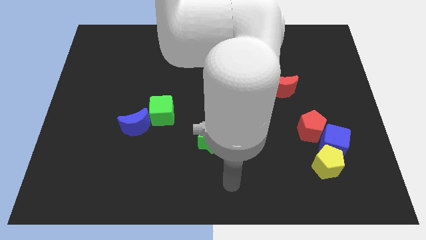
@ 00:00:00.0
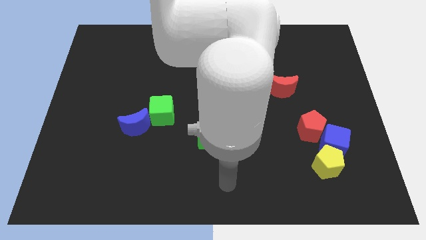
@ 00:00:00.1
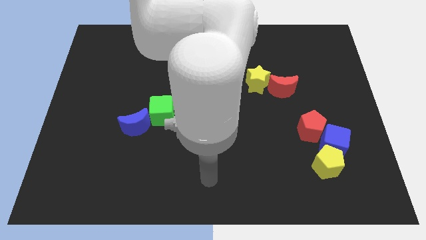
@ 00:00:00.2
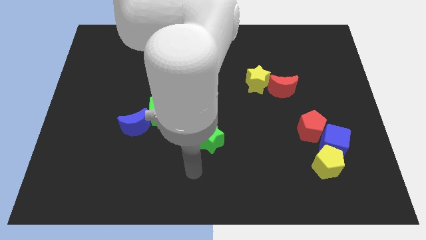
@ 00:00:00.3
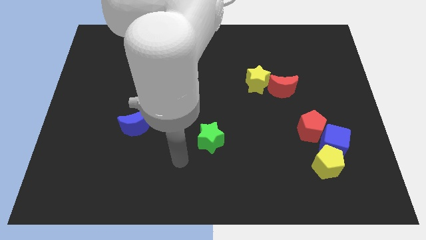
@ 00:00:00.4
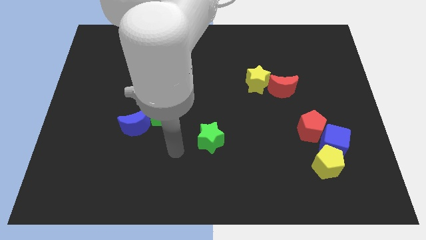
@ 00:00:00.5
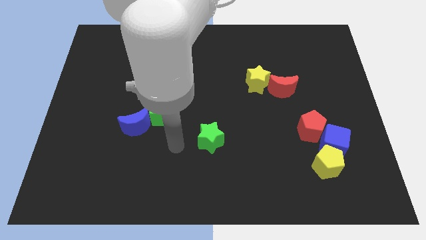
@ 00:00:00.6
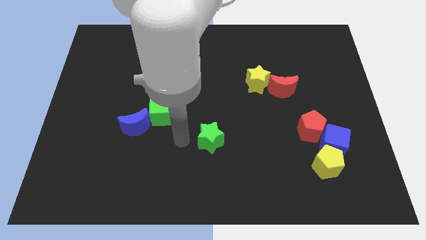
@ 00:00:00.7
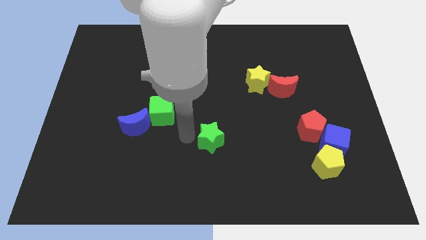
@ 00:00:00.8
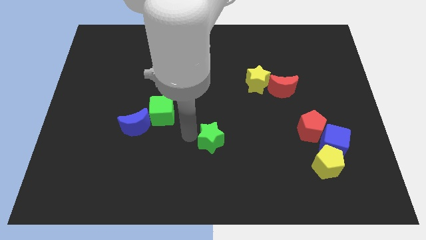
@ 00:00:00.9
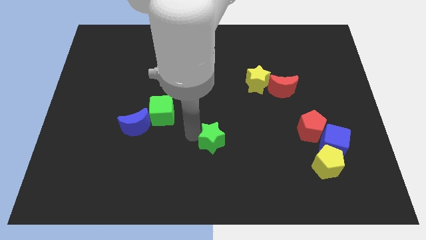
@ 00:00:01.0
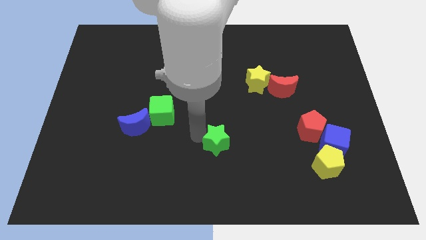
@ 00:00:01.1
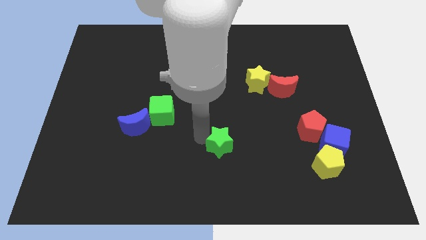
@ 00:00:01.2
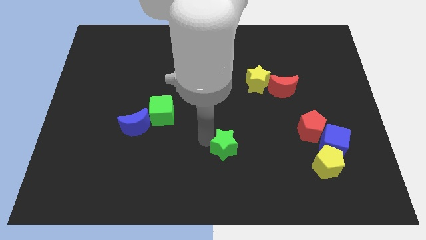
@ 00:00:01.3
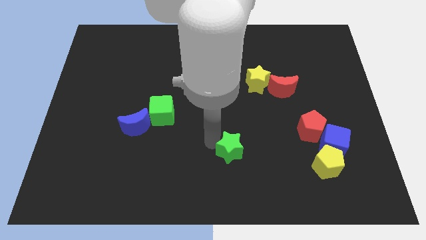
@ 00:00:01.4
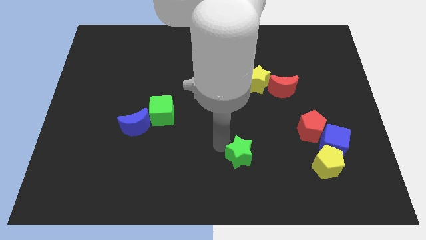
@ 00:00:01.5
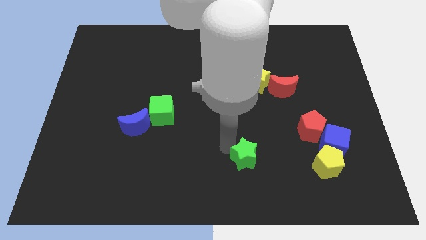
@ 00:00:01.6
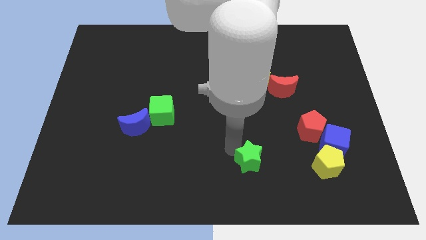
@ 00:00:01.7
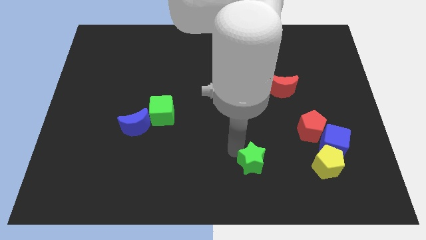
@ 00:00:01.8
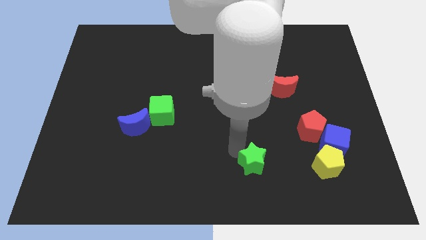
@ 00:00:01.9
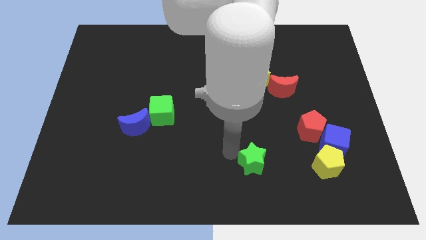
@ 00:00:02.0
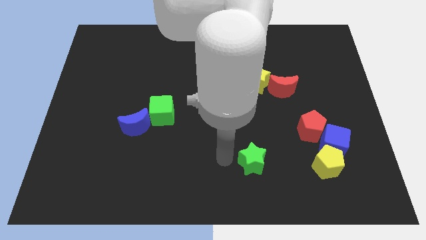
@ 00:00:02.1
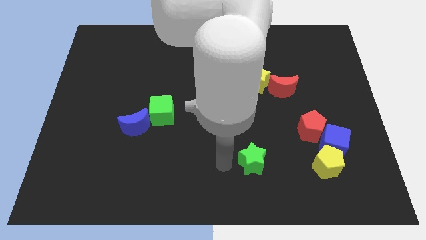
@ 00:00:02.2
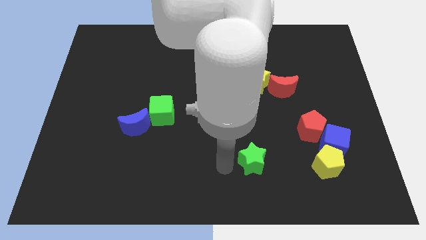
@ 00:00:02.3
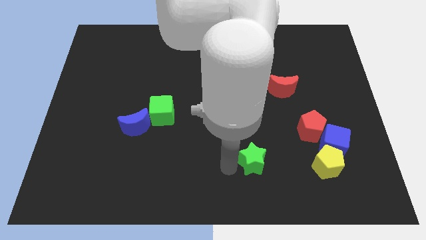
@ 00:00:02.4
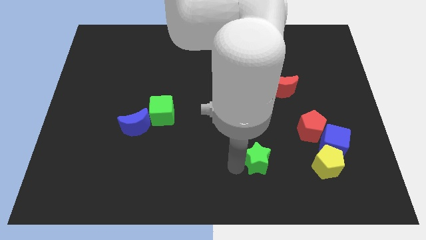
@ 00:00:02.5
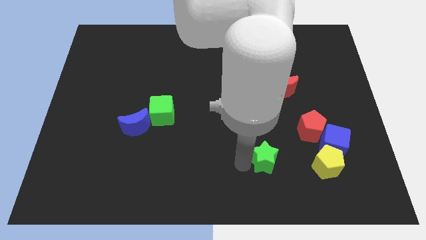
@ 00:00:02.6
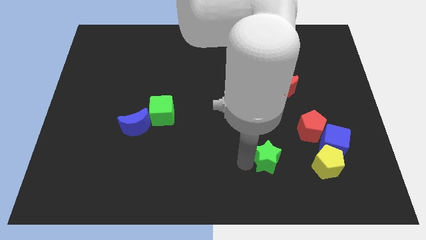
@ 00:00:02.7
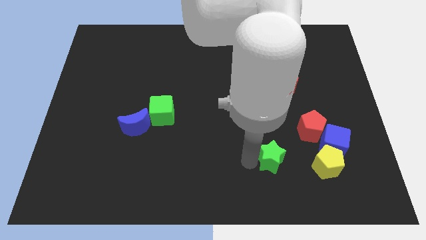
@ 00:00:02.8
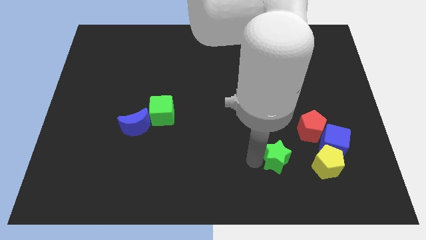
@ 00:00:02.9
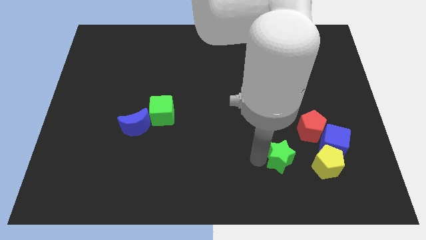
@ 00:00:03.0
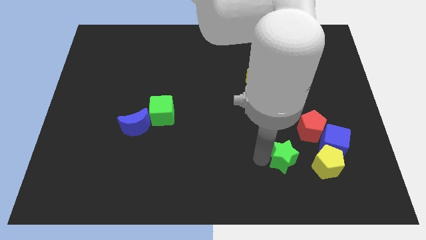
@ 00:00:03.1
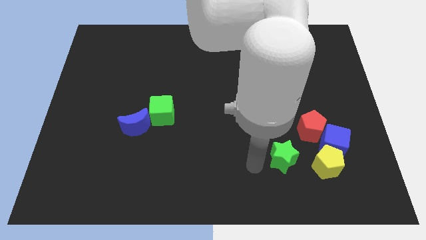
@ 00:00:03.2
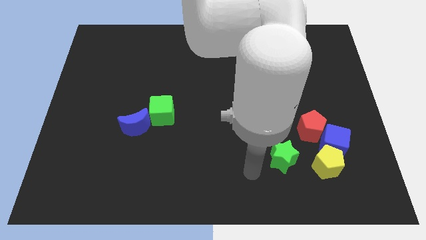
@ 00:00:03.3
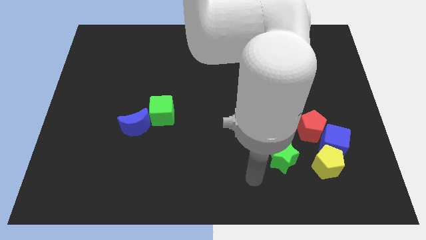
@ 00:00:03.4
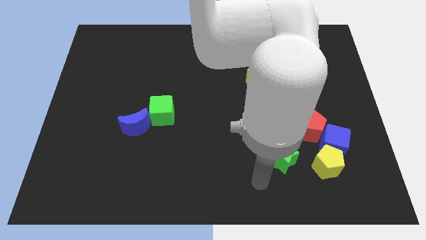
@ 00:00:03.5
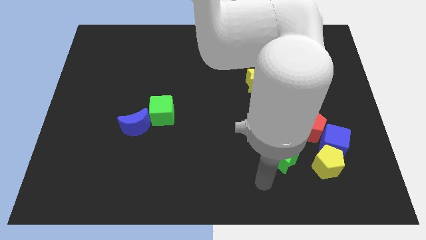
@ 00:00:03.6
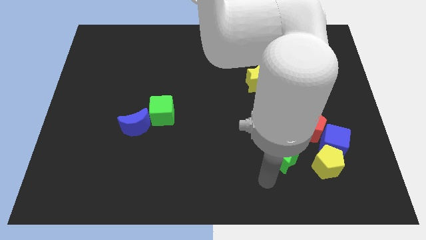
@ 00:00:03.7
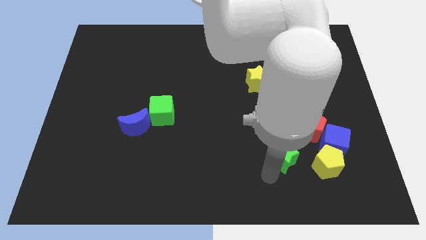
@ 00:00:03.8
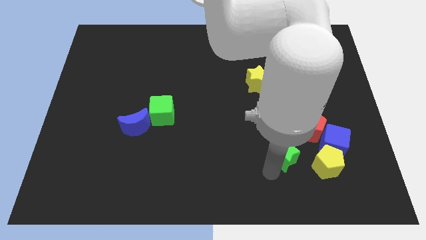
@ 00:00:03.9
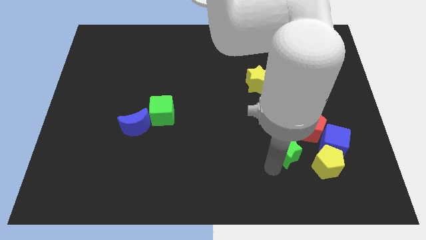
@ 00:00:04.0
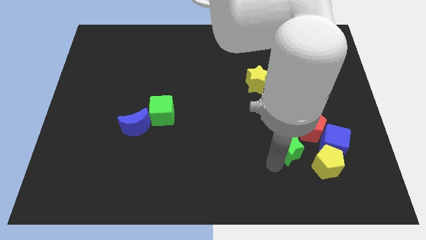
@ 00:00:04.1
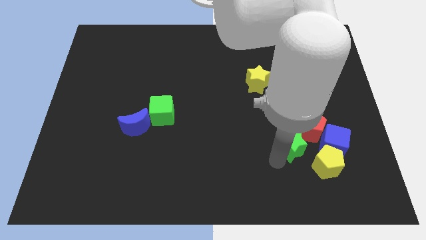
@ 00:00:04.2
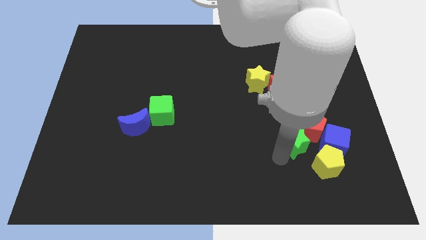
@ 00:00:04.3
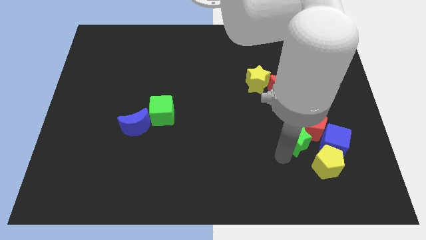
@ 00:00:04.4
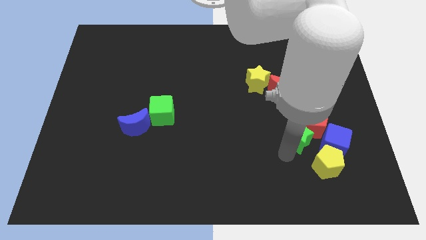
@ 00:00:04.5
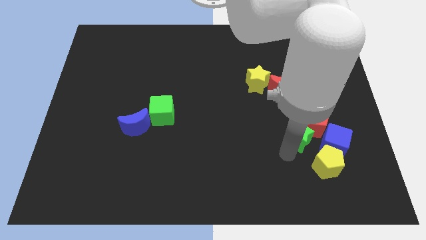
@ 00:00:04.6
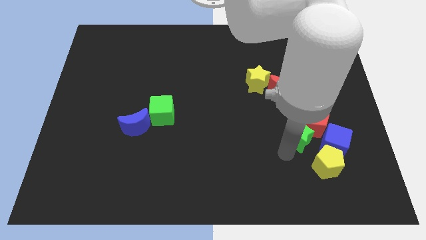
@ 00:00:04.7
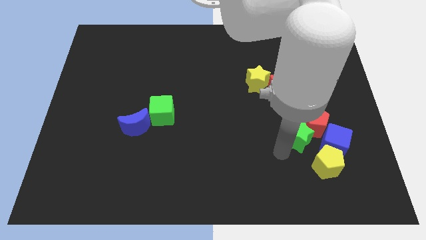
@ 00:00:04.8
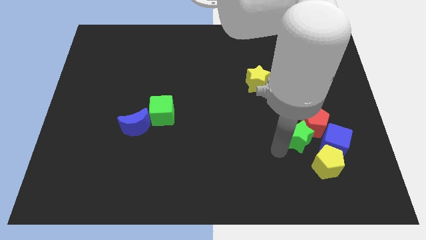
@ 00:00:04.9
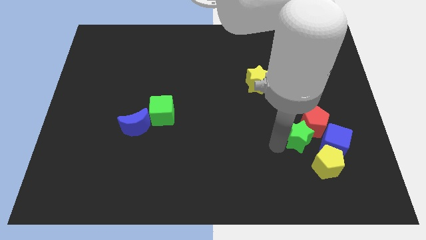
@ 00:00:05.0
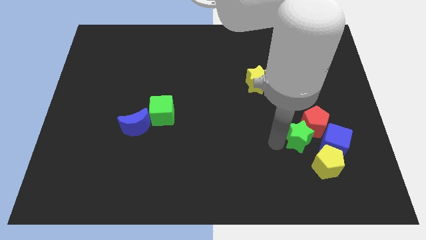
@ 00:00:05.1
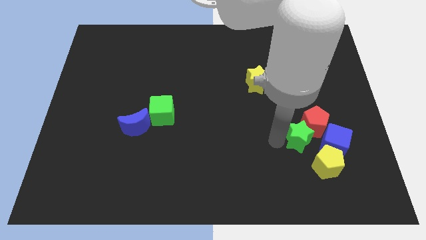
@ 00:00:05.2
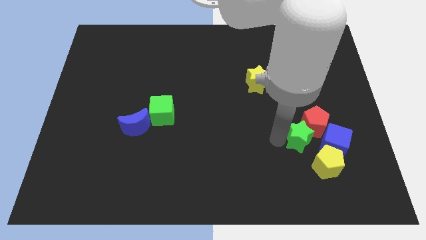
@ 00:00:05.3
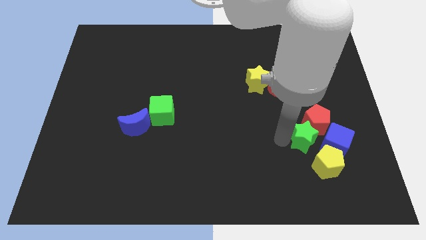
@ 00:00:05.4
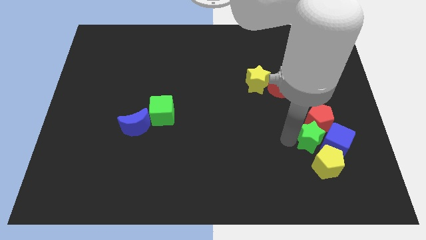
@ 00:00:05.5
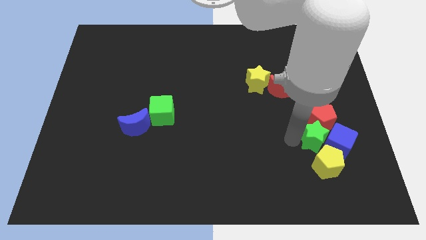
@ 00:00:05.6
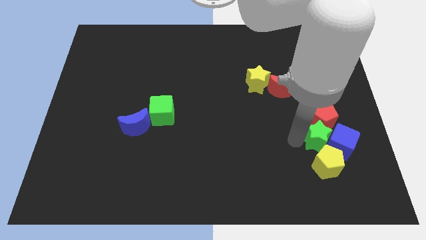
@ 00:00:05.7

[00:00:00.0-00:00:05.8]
put the green star next to the blue cube

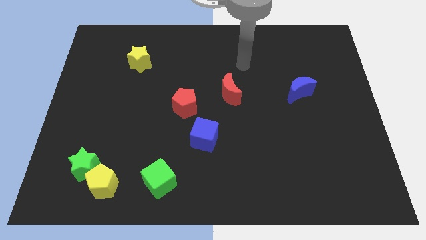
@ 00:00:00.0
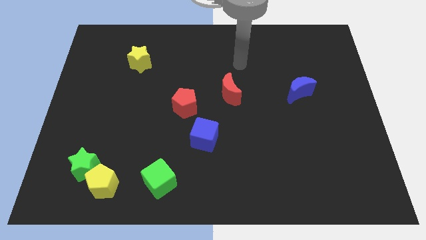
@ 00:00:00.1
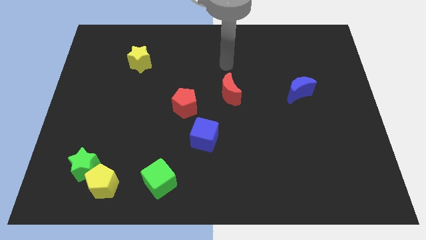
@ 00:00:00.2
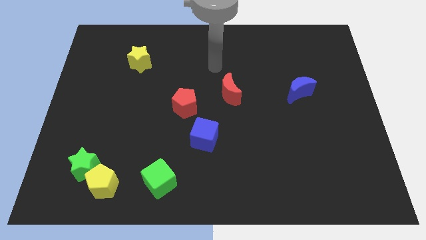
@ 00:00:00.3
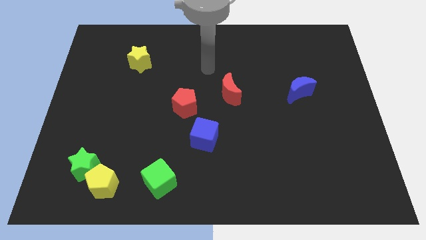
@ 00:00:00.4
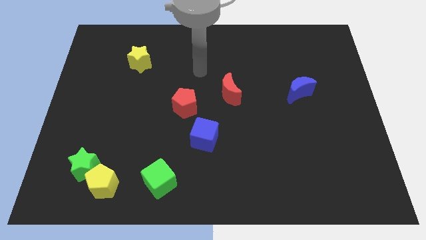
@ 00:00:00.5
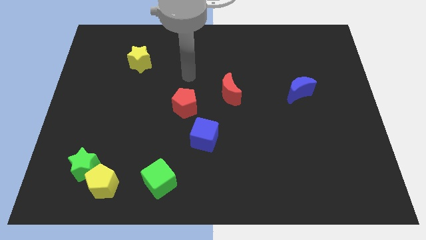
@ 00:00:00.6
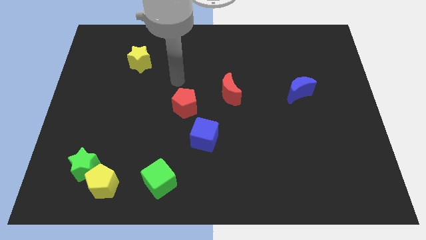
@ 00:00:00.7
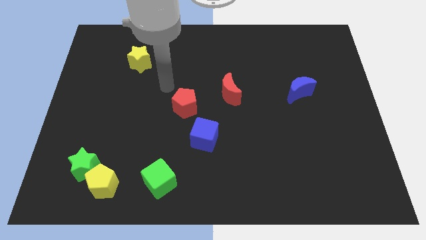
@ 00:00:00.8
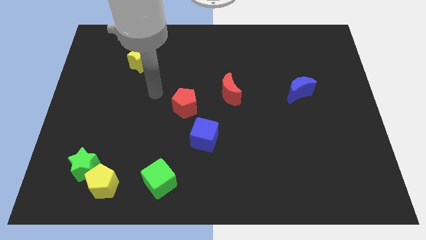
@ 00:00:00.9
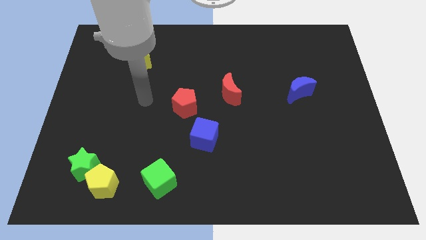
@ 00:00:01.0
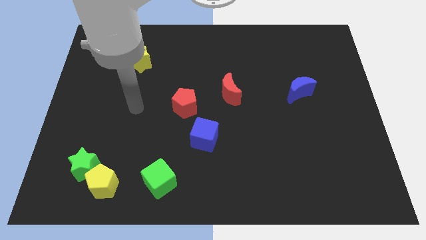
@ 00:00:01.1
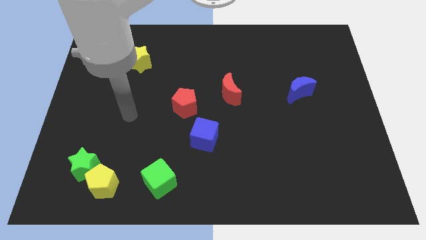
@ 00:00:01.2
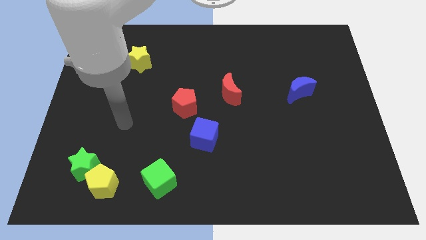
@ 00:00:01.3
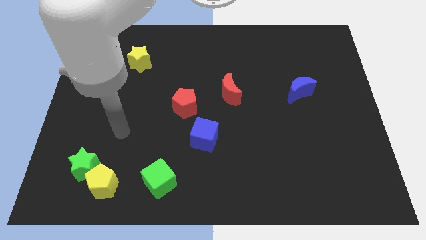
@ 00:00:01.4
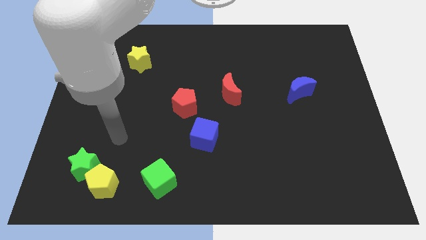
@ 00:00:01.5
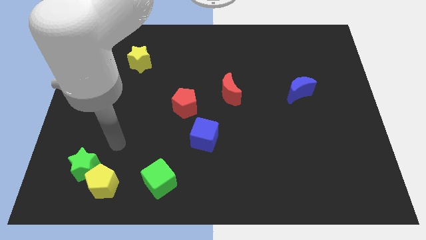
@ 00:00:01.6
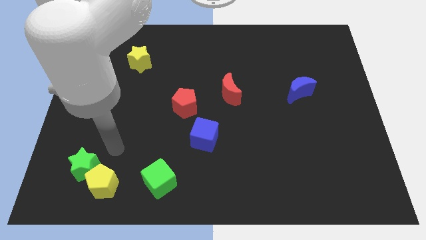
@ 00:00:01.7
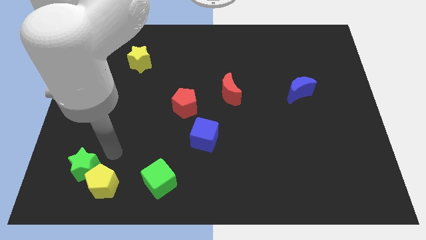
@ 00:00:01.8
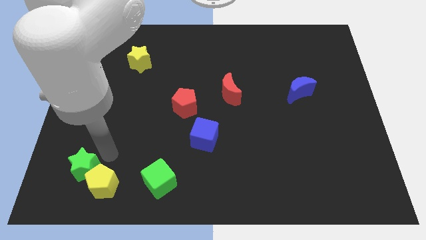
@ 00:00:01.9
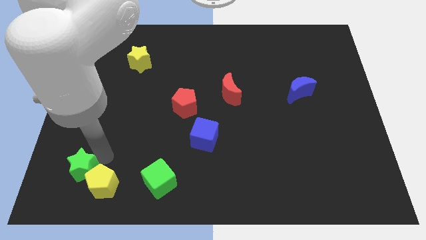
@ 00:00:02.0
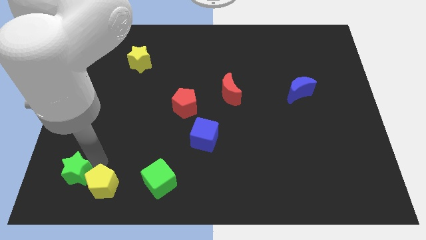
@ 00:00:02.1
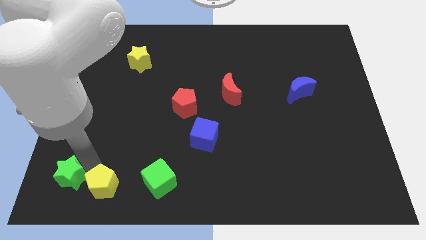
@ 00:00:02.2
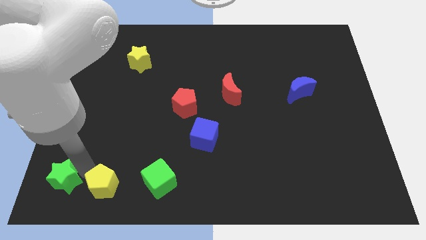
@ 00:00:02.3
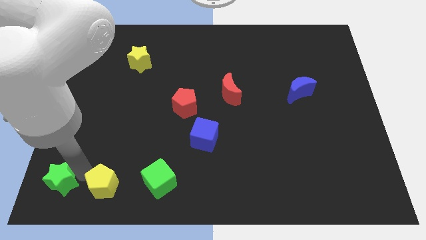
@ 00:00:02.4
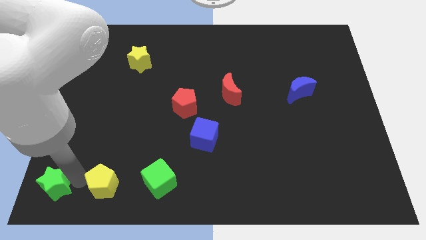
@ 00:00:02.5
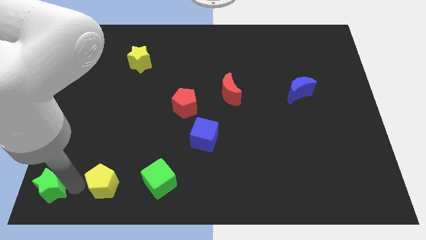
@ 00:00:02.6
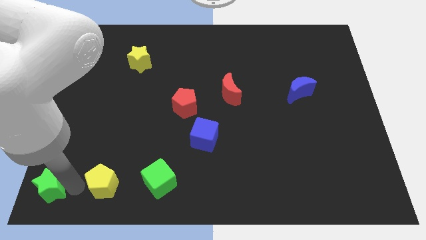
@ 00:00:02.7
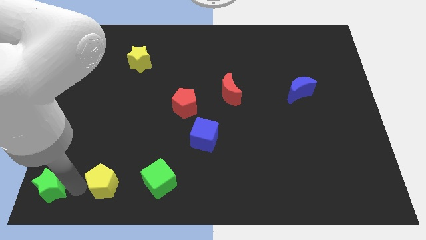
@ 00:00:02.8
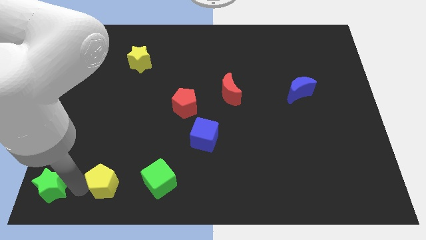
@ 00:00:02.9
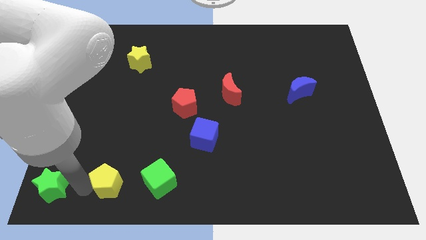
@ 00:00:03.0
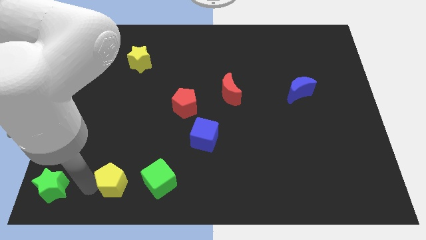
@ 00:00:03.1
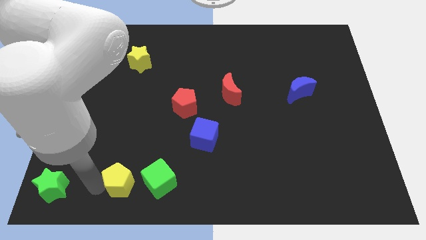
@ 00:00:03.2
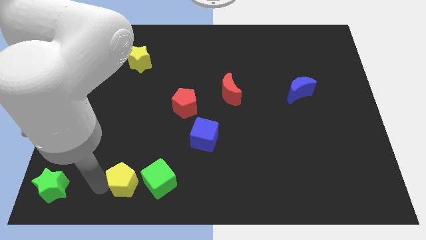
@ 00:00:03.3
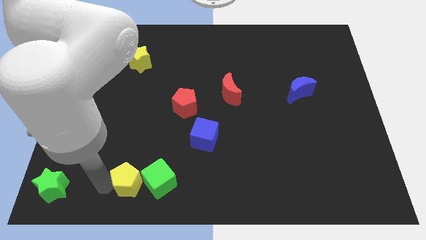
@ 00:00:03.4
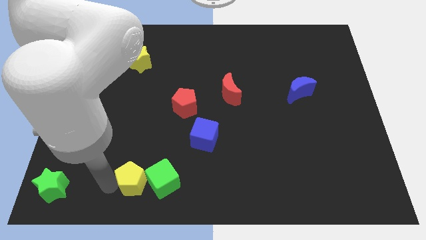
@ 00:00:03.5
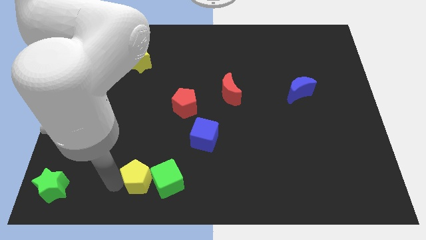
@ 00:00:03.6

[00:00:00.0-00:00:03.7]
put the yellow pentagon close to the green cube
